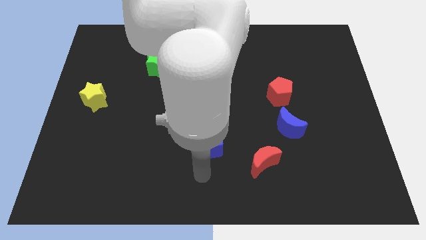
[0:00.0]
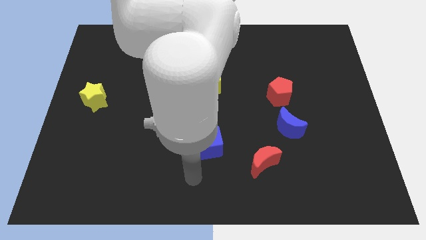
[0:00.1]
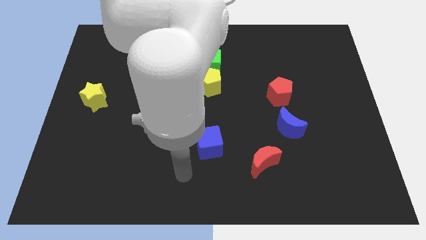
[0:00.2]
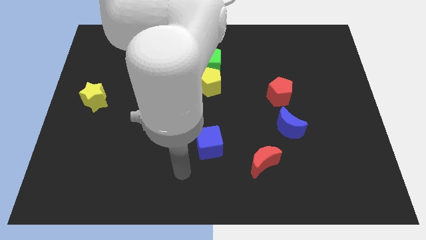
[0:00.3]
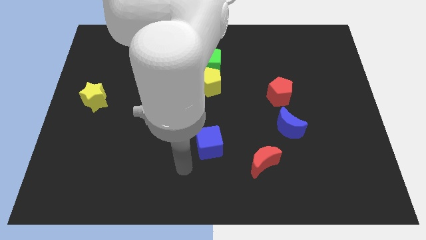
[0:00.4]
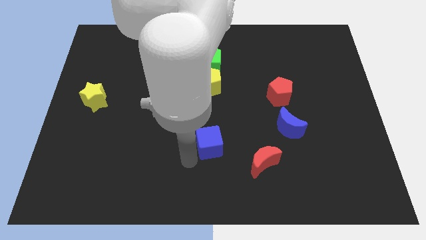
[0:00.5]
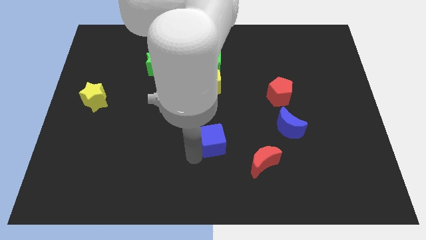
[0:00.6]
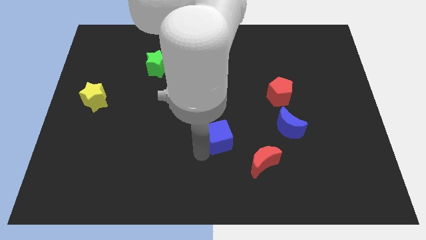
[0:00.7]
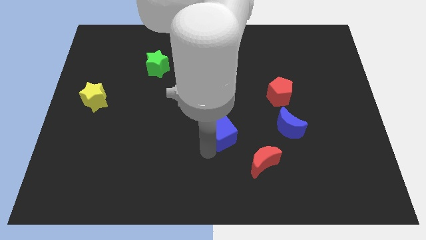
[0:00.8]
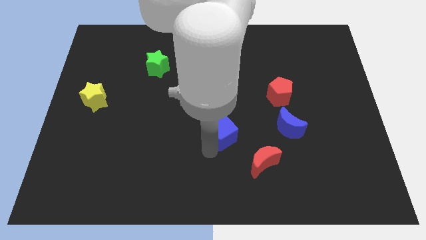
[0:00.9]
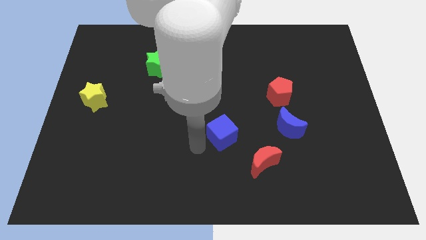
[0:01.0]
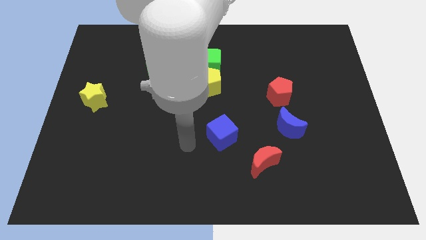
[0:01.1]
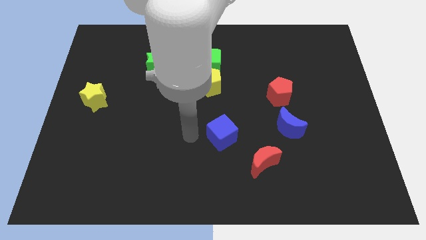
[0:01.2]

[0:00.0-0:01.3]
place the blue cube in between the red moon and yellow pentagon

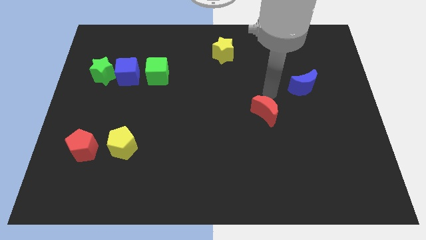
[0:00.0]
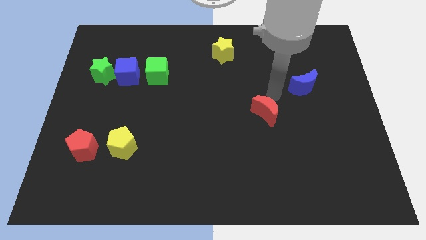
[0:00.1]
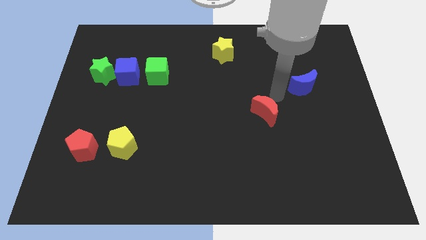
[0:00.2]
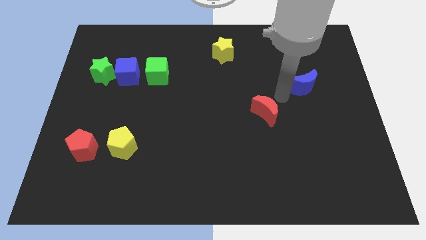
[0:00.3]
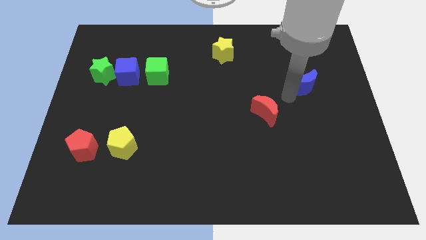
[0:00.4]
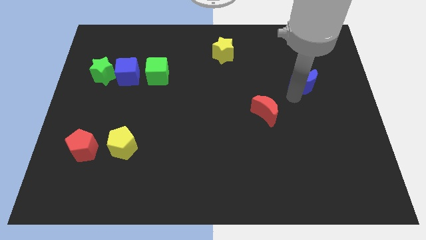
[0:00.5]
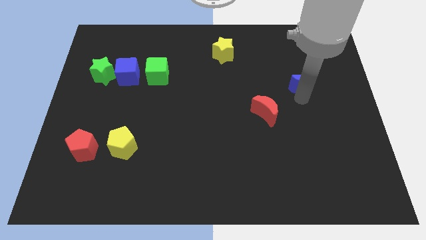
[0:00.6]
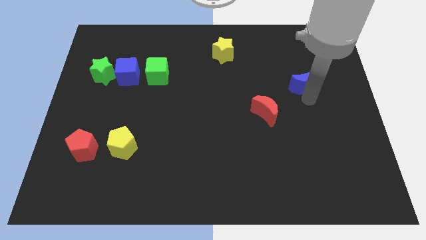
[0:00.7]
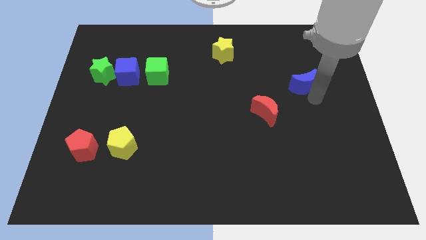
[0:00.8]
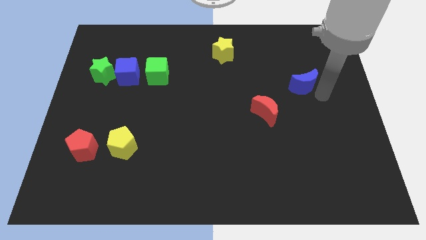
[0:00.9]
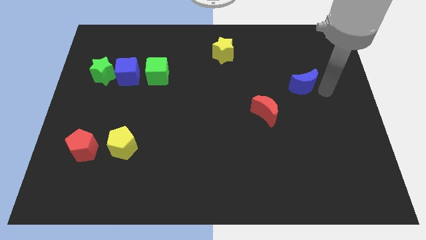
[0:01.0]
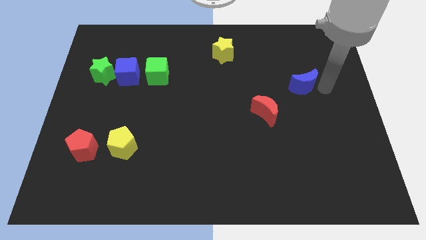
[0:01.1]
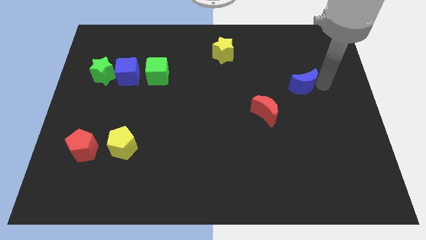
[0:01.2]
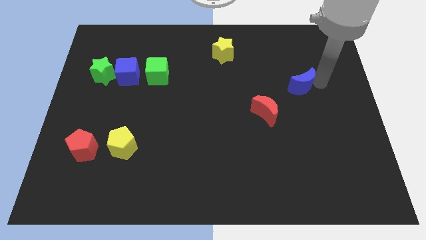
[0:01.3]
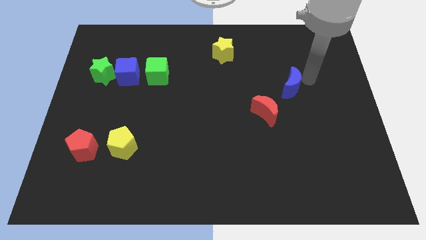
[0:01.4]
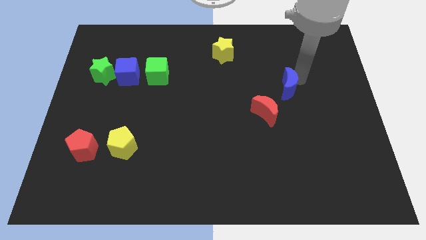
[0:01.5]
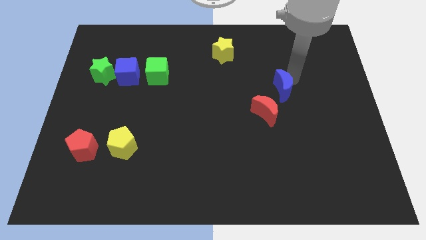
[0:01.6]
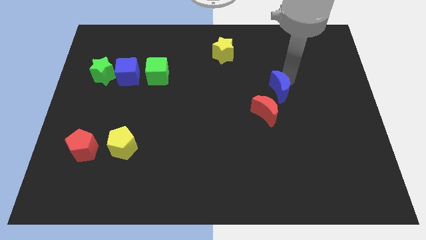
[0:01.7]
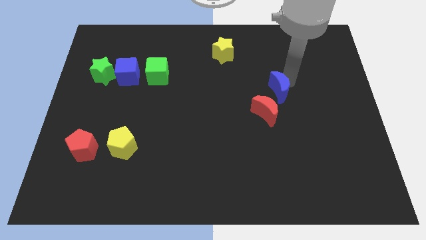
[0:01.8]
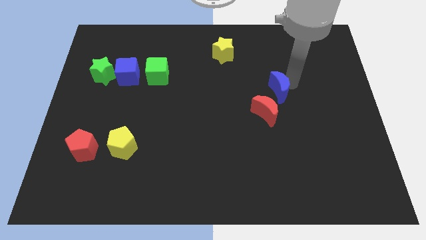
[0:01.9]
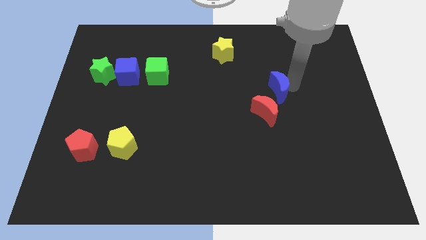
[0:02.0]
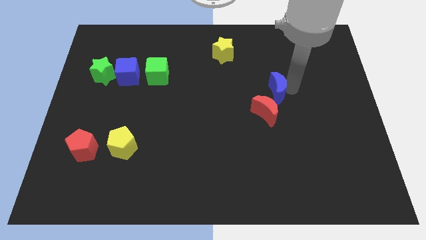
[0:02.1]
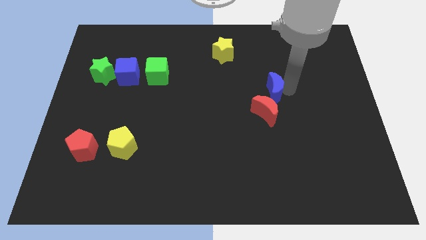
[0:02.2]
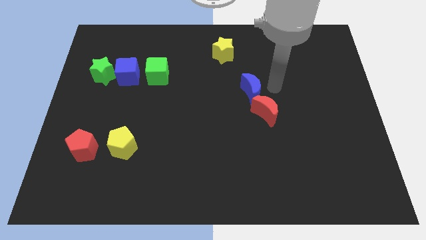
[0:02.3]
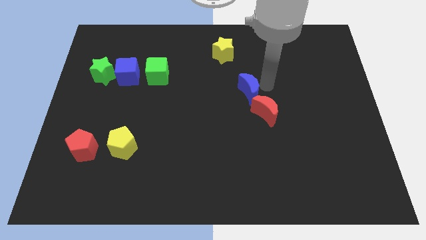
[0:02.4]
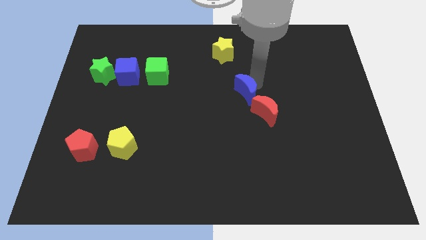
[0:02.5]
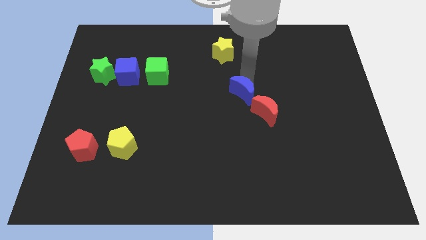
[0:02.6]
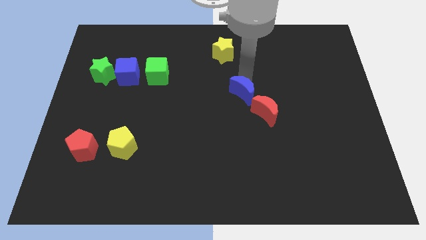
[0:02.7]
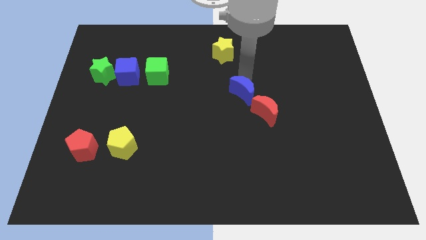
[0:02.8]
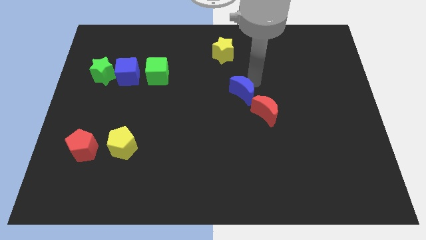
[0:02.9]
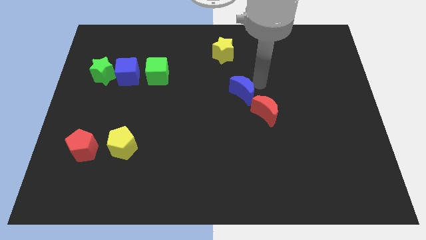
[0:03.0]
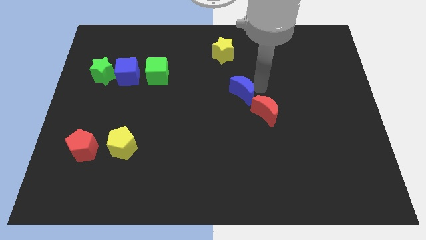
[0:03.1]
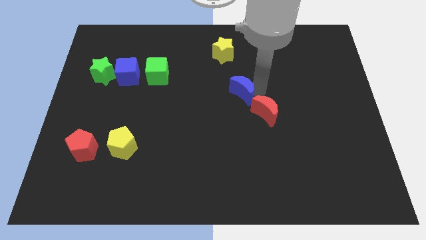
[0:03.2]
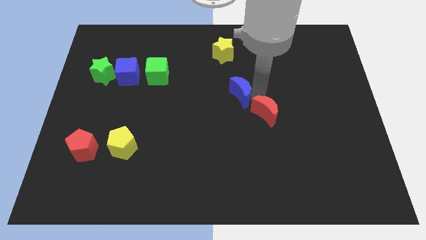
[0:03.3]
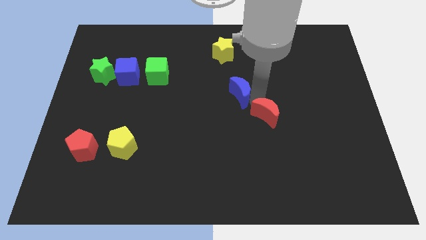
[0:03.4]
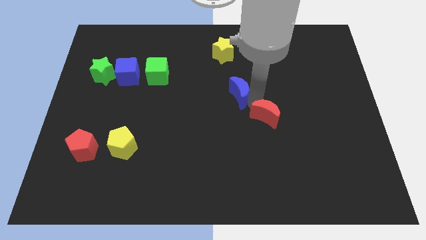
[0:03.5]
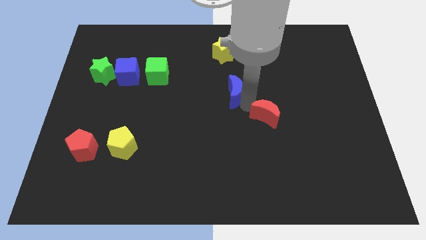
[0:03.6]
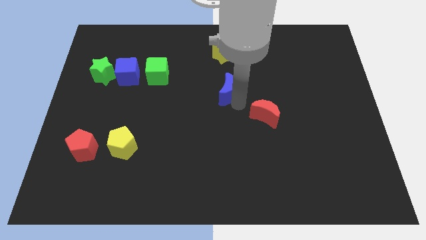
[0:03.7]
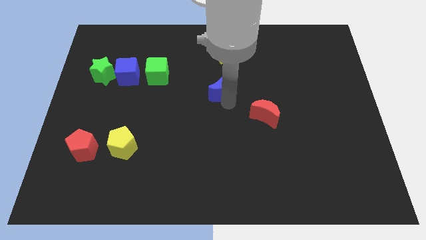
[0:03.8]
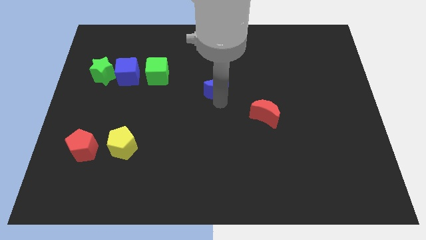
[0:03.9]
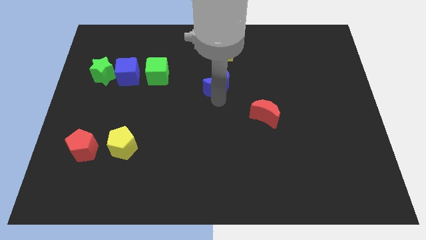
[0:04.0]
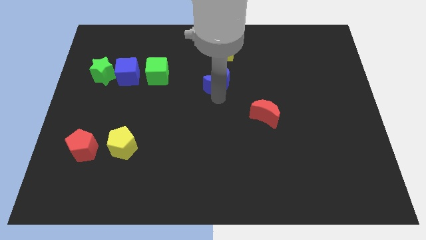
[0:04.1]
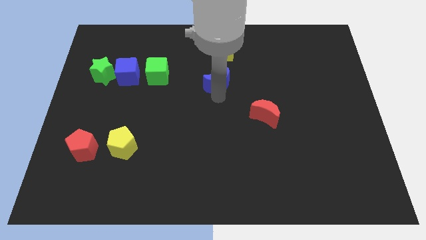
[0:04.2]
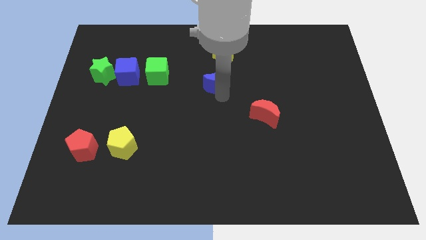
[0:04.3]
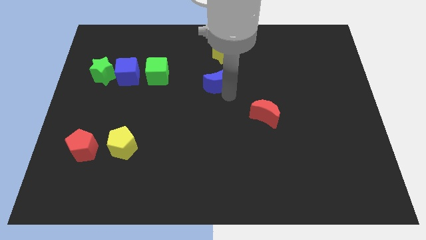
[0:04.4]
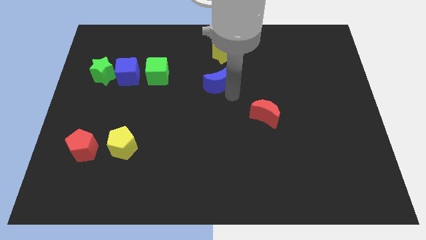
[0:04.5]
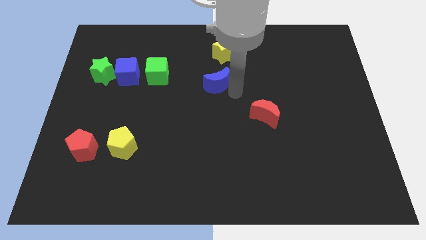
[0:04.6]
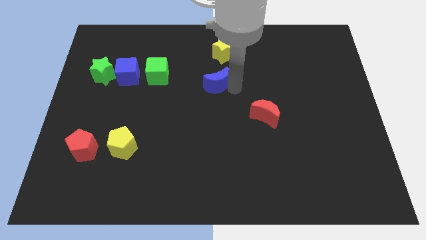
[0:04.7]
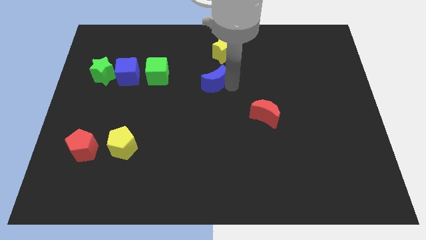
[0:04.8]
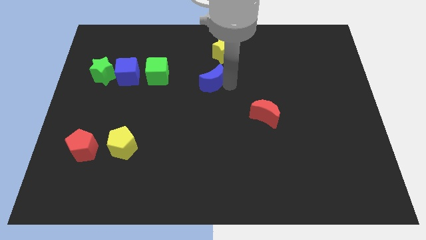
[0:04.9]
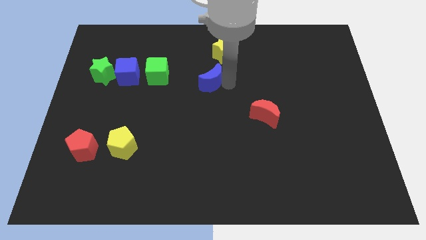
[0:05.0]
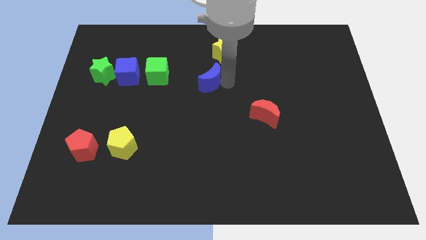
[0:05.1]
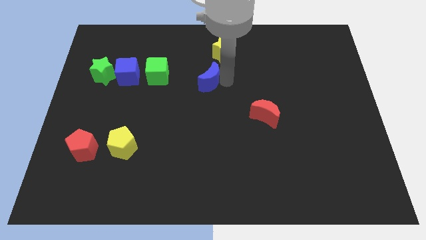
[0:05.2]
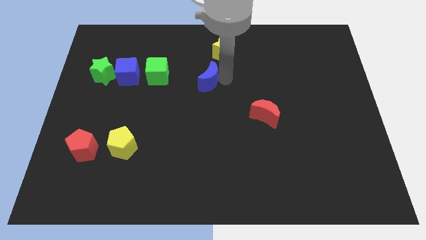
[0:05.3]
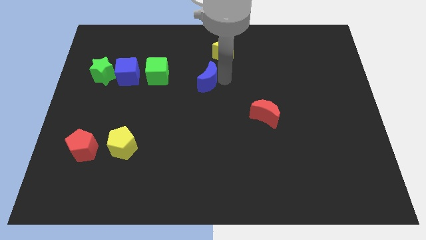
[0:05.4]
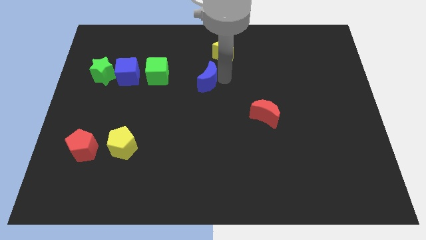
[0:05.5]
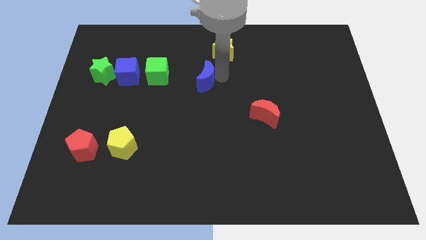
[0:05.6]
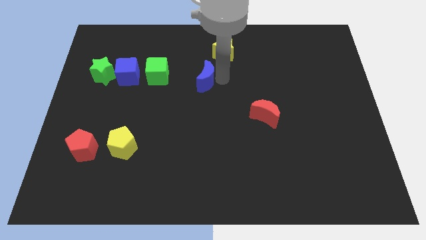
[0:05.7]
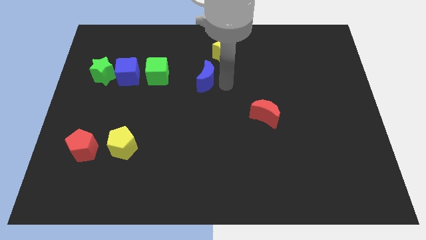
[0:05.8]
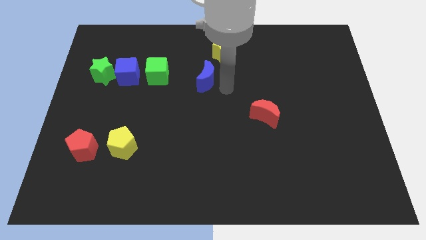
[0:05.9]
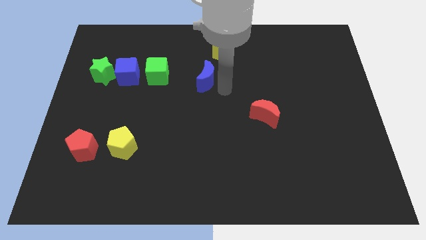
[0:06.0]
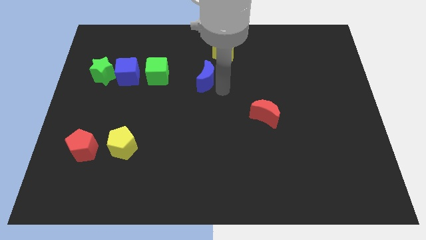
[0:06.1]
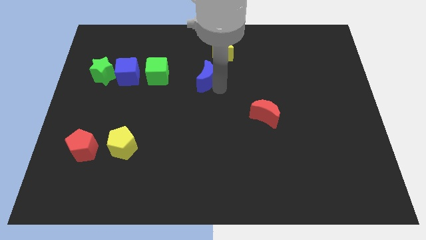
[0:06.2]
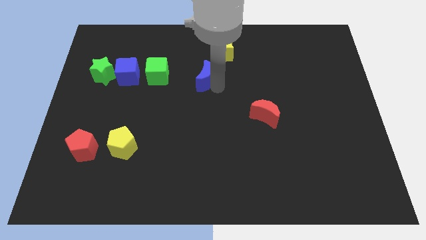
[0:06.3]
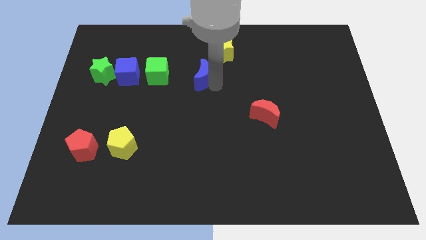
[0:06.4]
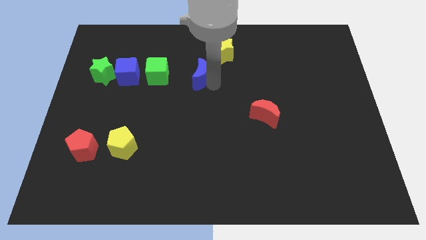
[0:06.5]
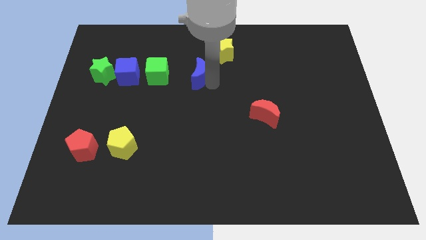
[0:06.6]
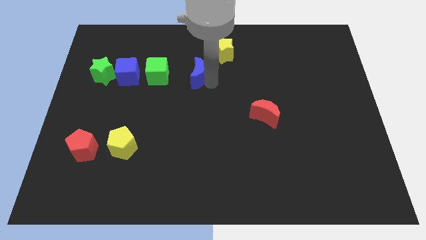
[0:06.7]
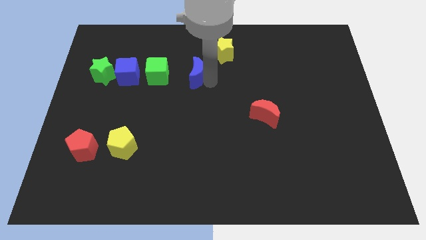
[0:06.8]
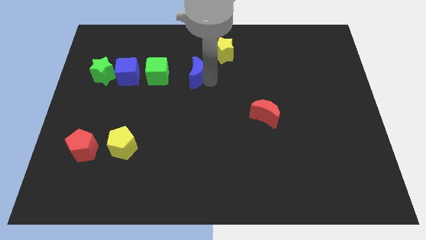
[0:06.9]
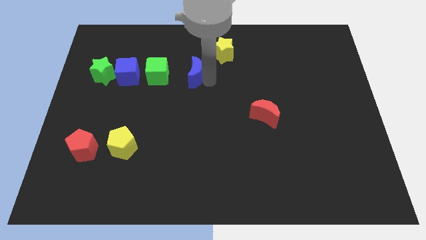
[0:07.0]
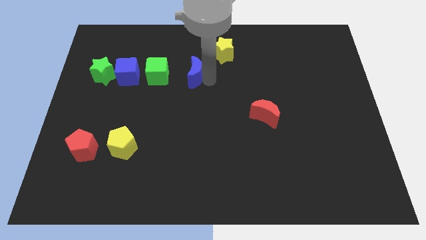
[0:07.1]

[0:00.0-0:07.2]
place the blue moon to the right side of the green cube

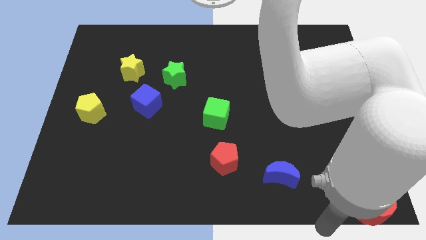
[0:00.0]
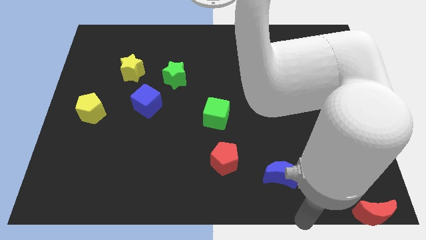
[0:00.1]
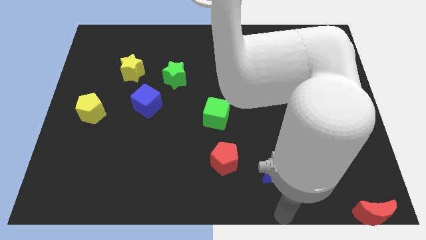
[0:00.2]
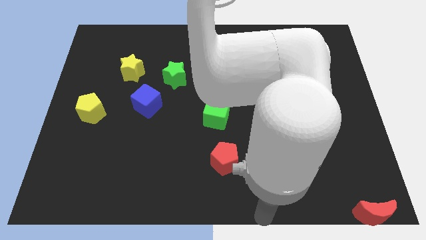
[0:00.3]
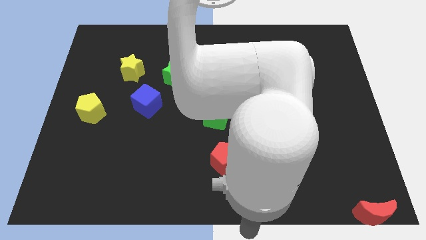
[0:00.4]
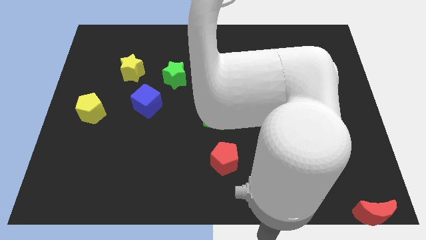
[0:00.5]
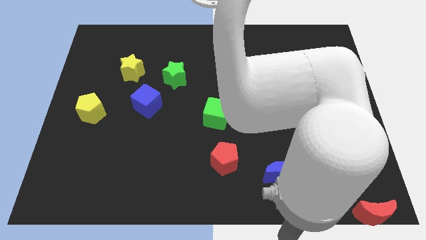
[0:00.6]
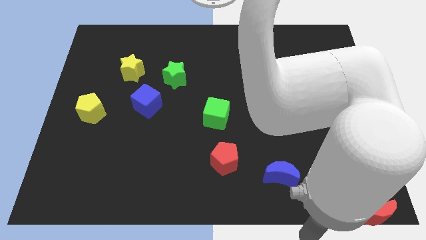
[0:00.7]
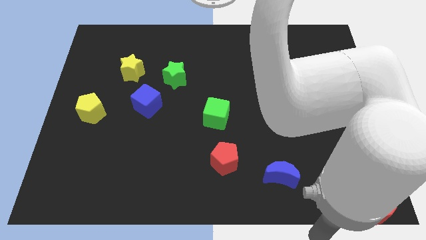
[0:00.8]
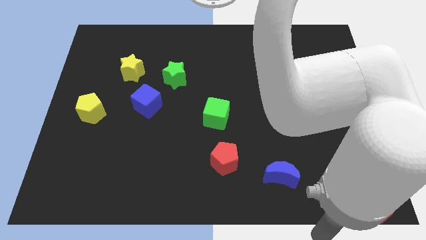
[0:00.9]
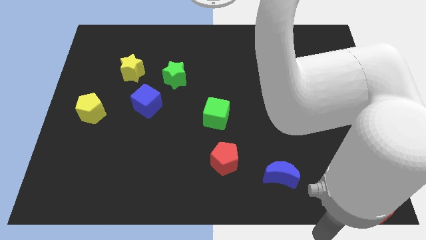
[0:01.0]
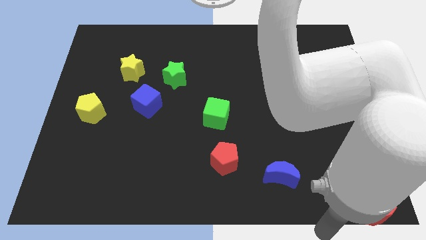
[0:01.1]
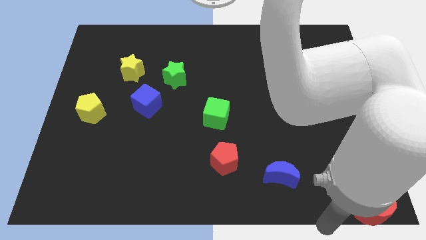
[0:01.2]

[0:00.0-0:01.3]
point the arm at the bottom of the board
